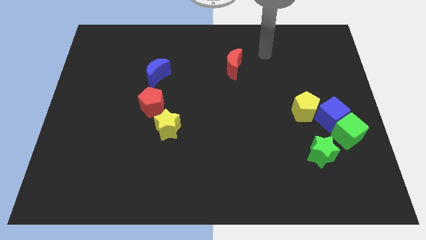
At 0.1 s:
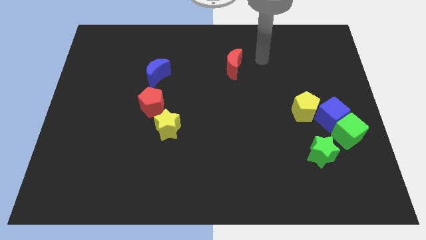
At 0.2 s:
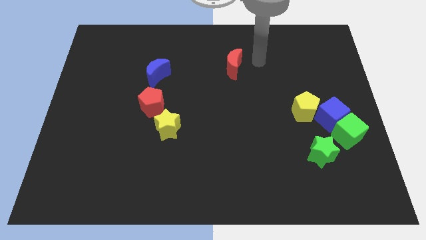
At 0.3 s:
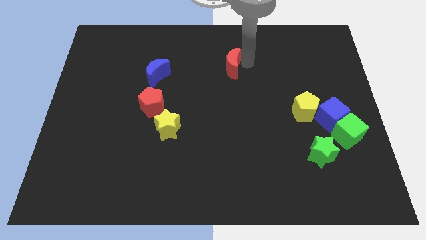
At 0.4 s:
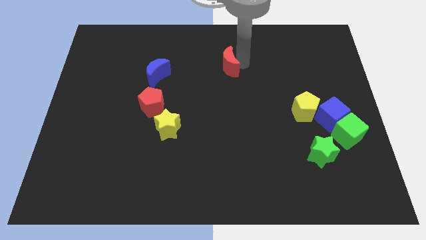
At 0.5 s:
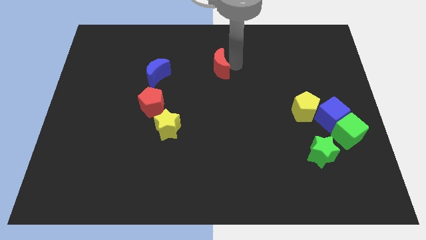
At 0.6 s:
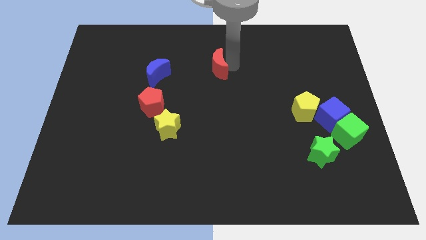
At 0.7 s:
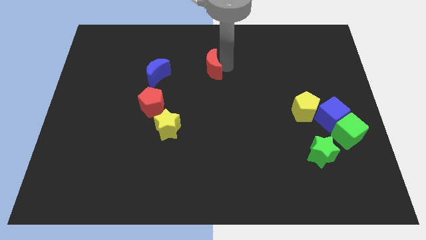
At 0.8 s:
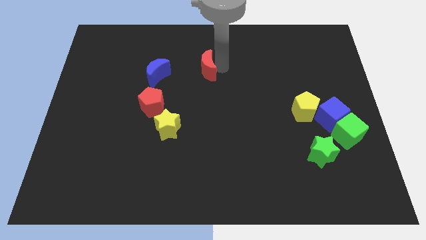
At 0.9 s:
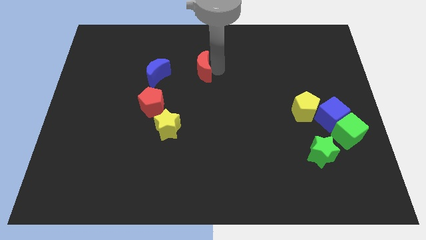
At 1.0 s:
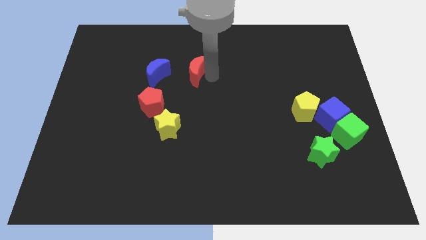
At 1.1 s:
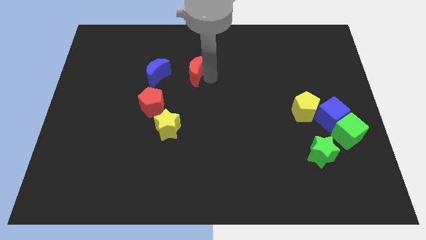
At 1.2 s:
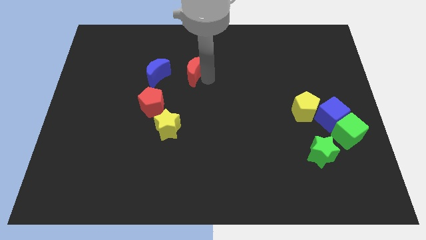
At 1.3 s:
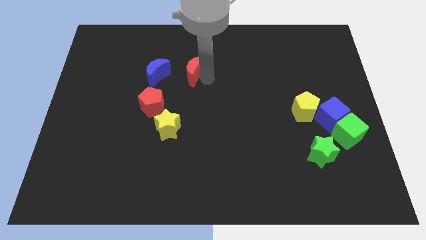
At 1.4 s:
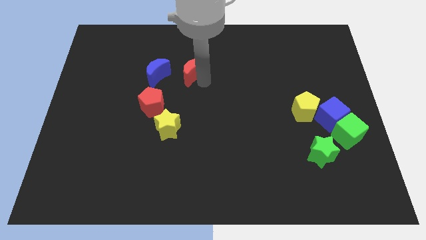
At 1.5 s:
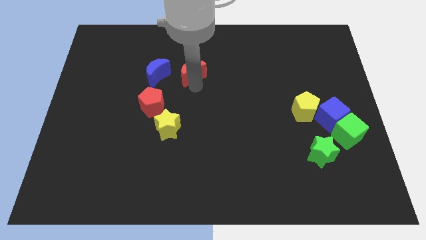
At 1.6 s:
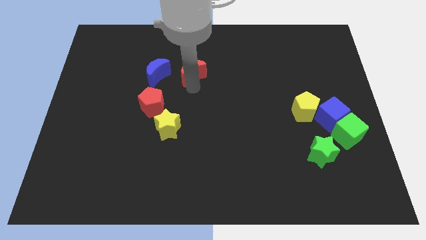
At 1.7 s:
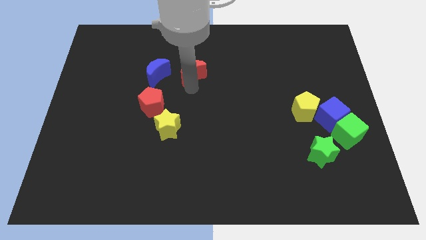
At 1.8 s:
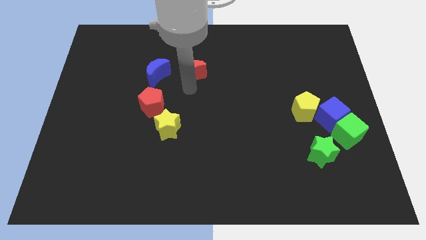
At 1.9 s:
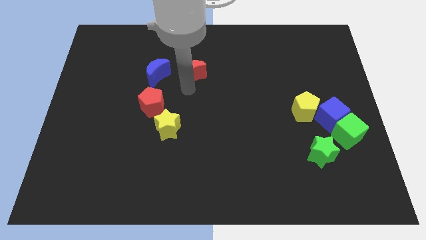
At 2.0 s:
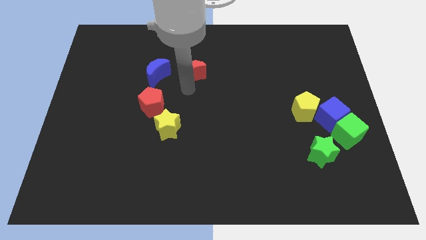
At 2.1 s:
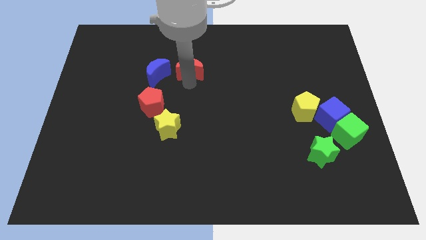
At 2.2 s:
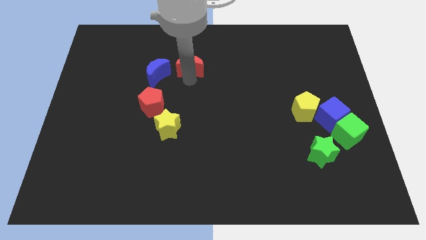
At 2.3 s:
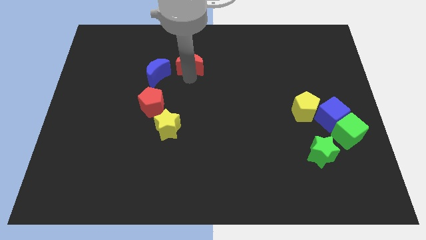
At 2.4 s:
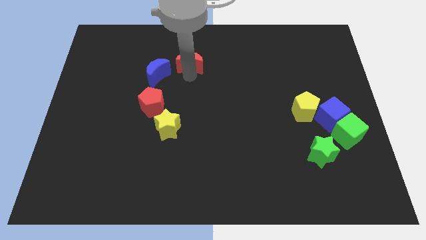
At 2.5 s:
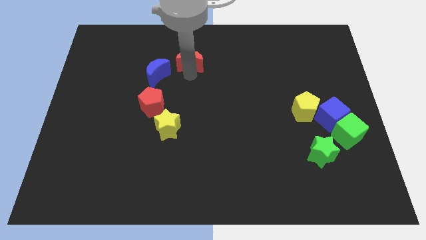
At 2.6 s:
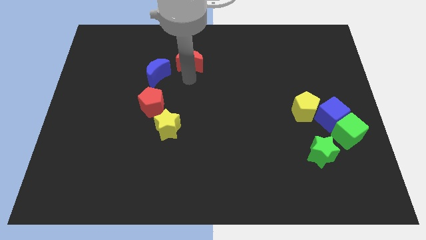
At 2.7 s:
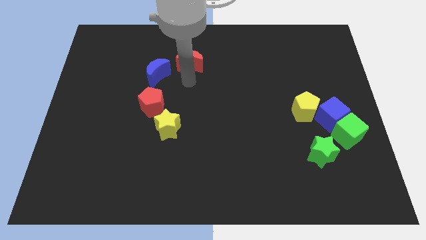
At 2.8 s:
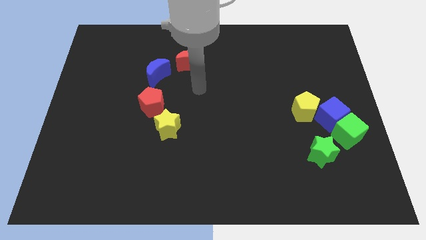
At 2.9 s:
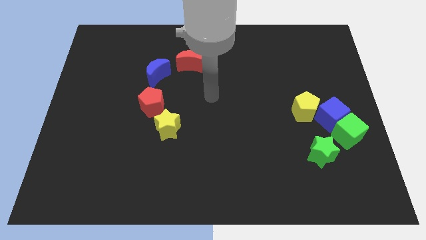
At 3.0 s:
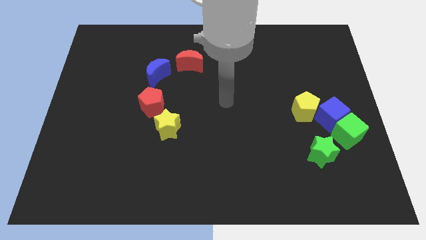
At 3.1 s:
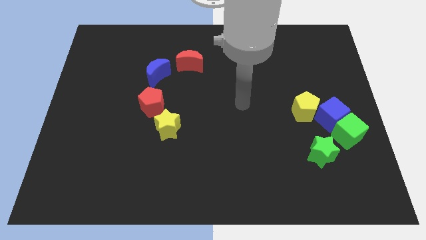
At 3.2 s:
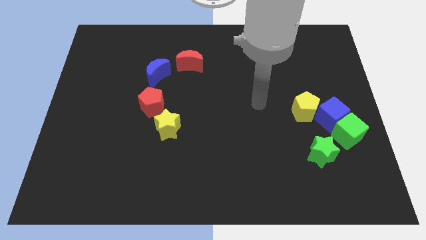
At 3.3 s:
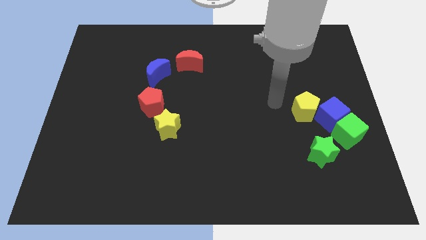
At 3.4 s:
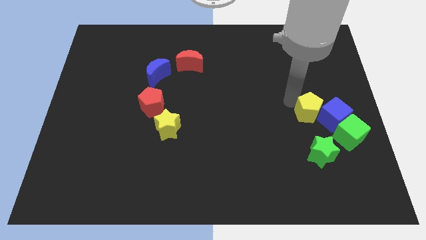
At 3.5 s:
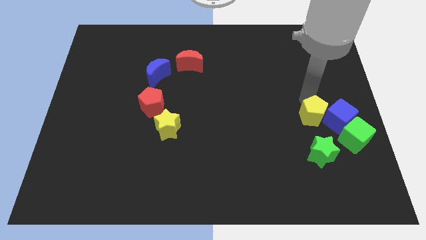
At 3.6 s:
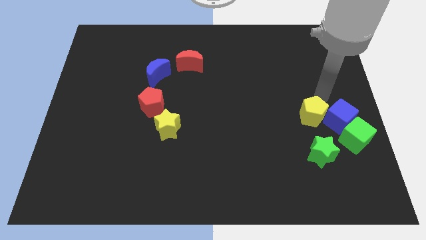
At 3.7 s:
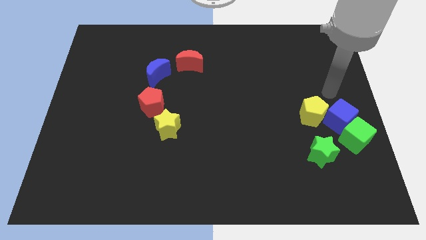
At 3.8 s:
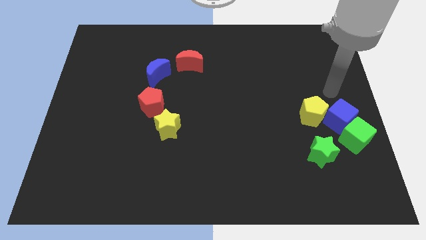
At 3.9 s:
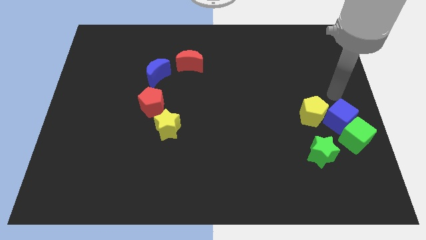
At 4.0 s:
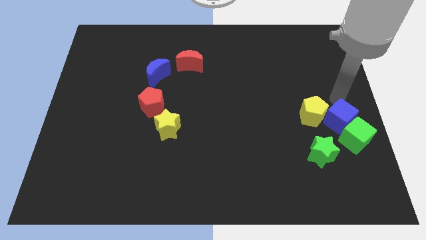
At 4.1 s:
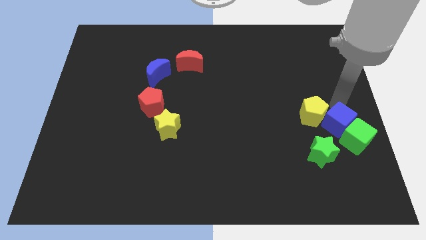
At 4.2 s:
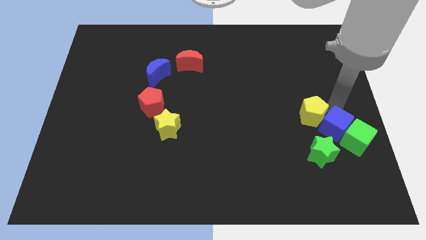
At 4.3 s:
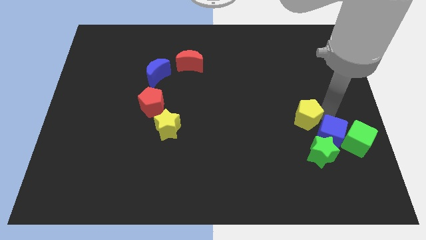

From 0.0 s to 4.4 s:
push red crescent to the right of the blue crerscent

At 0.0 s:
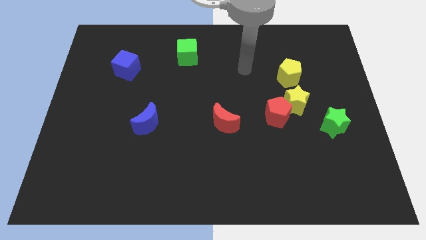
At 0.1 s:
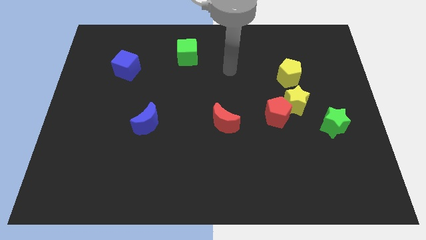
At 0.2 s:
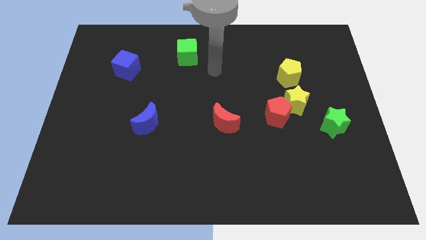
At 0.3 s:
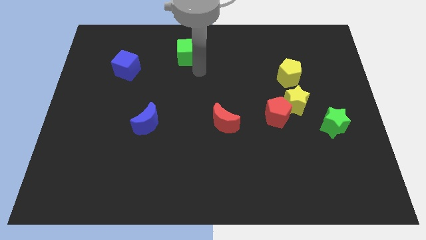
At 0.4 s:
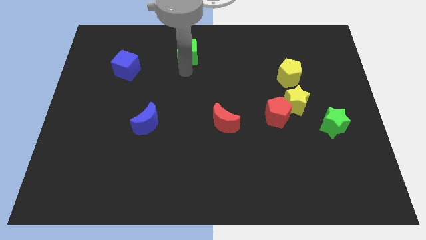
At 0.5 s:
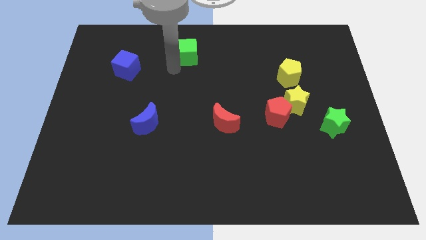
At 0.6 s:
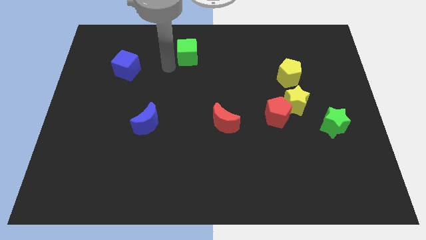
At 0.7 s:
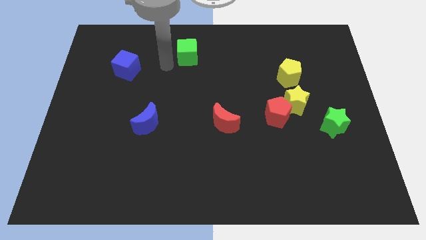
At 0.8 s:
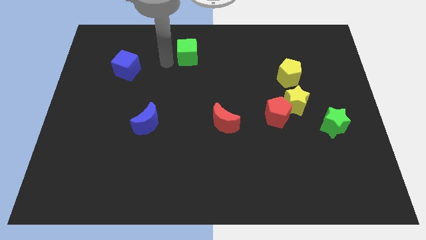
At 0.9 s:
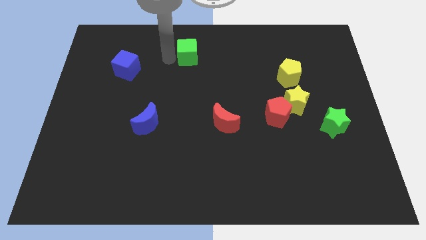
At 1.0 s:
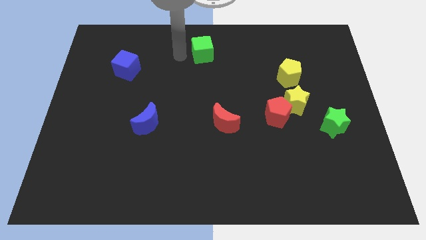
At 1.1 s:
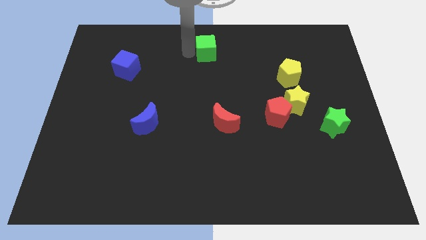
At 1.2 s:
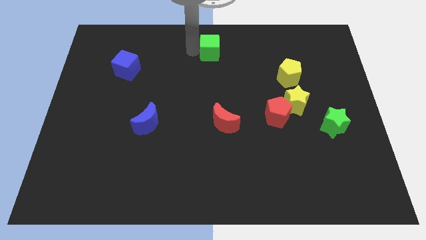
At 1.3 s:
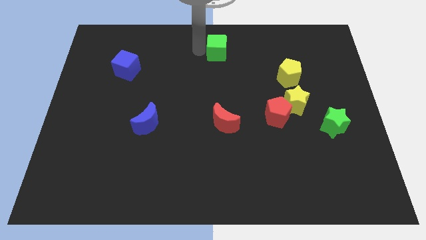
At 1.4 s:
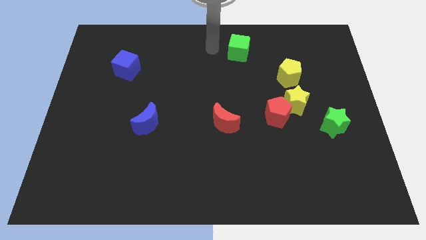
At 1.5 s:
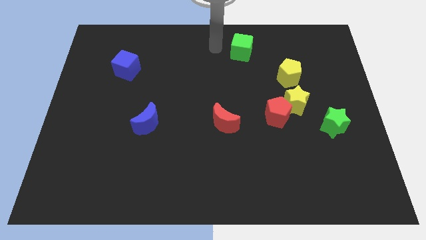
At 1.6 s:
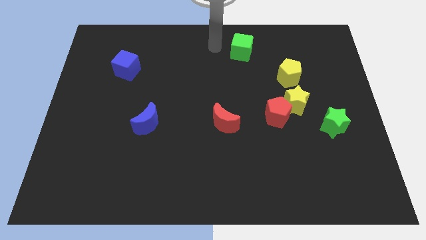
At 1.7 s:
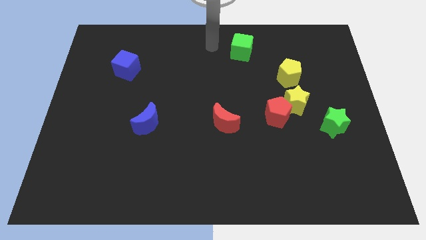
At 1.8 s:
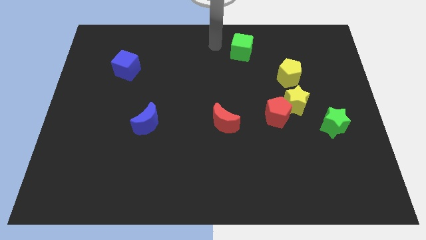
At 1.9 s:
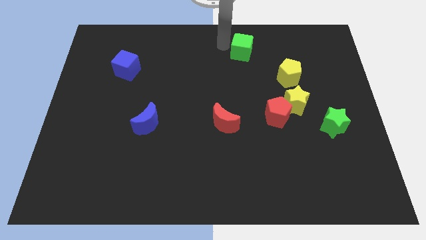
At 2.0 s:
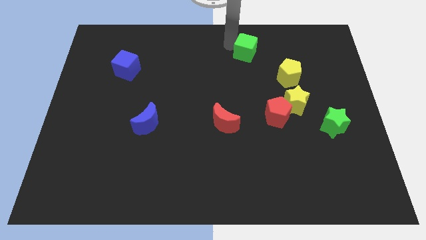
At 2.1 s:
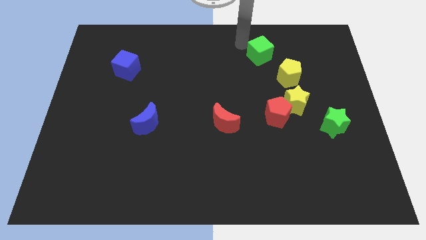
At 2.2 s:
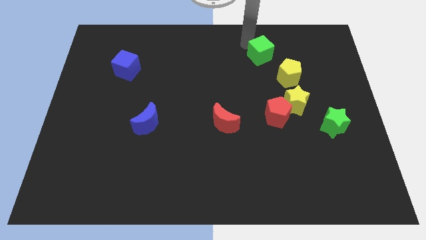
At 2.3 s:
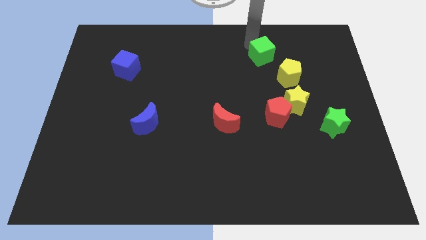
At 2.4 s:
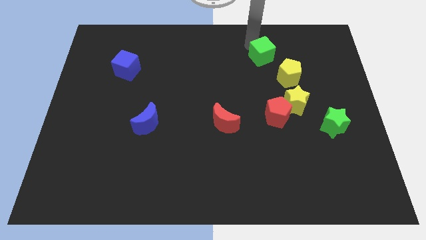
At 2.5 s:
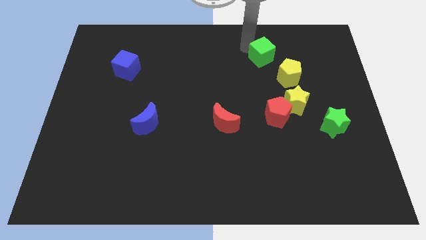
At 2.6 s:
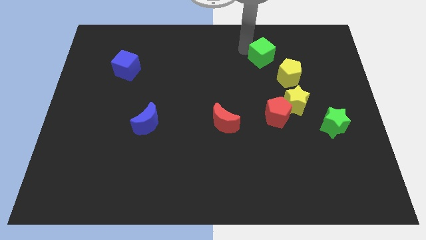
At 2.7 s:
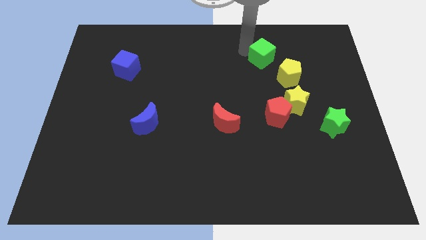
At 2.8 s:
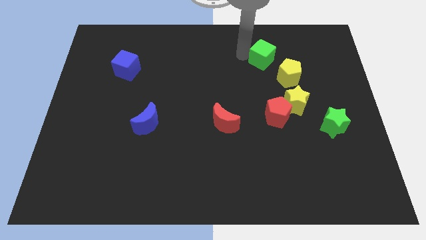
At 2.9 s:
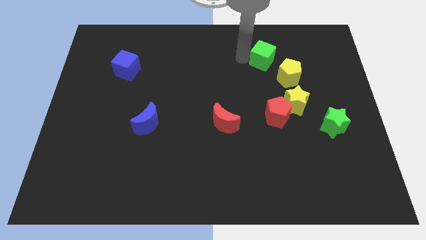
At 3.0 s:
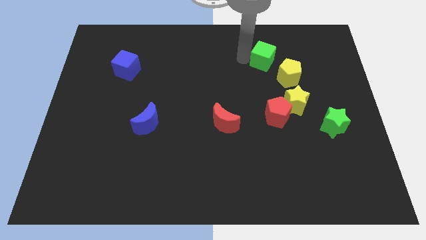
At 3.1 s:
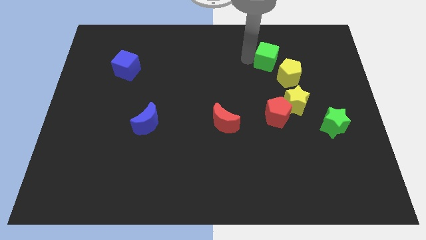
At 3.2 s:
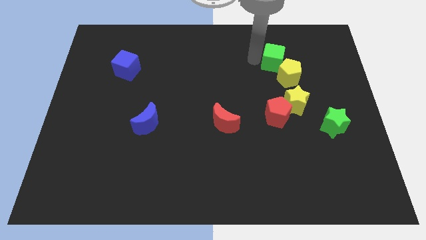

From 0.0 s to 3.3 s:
move the green cube close to the yellow pentagon

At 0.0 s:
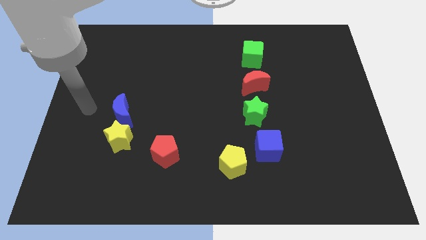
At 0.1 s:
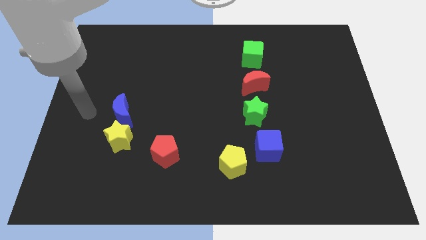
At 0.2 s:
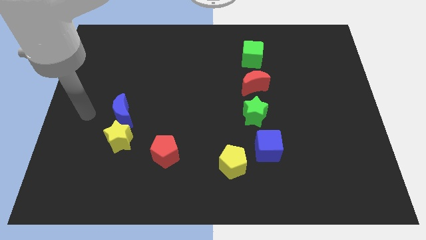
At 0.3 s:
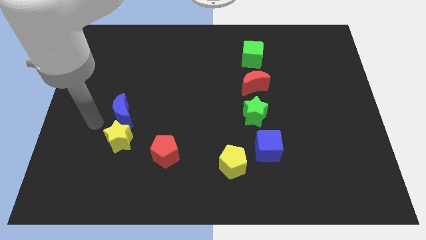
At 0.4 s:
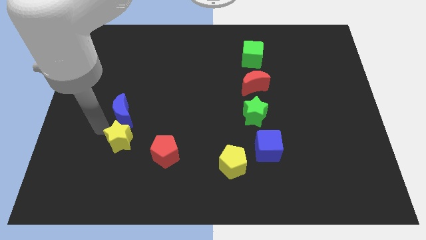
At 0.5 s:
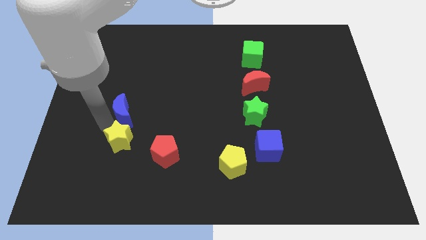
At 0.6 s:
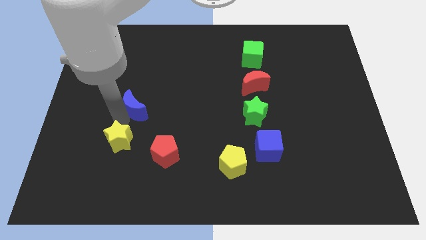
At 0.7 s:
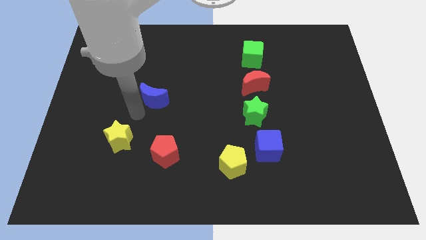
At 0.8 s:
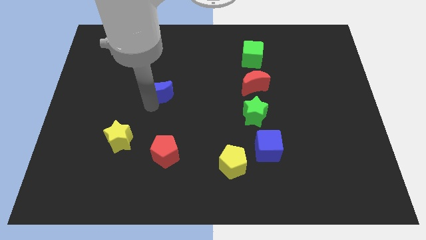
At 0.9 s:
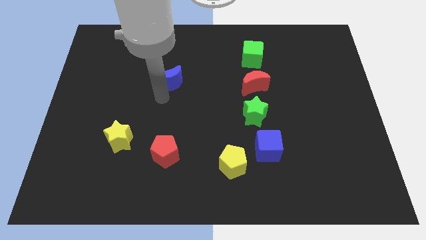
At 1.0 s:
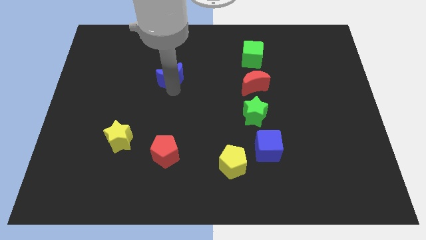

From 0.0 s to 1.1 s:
separate the blue moon from the yellow star
